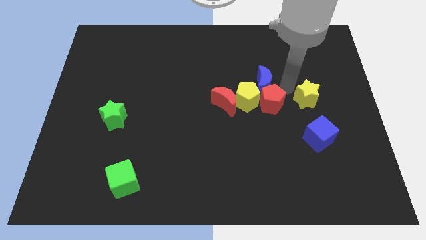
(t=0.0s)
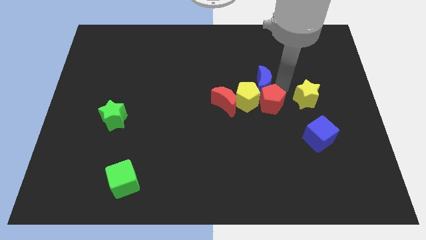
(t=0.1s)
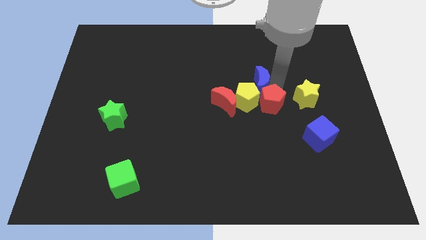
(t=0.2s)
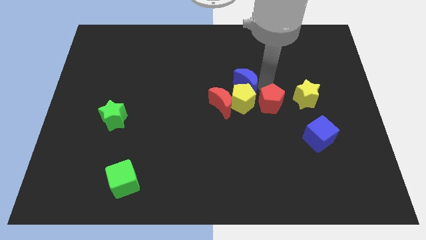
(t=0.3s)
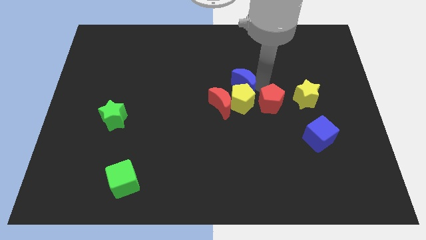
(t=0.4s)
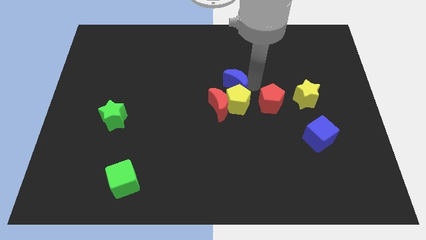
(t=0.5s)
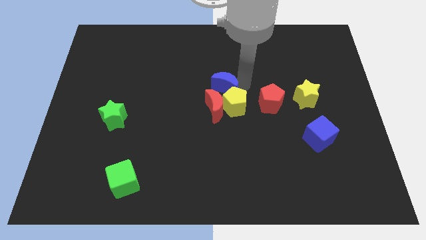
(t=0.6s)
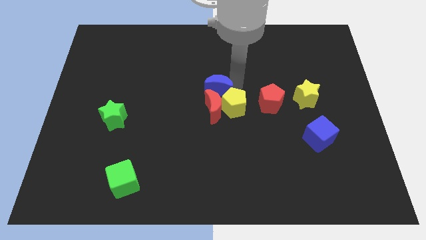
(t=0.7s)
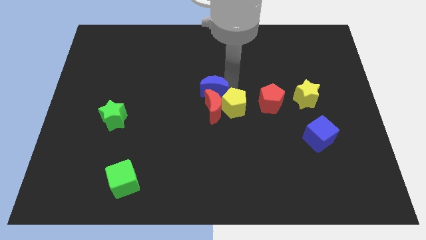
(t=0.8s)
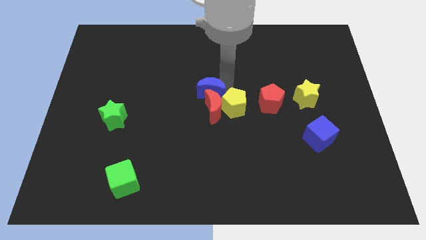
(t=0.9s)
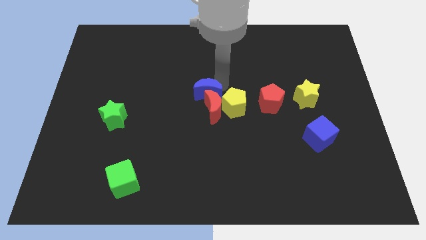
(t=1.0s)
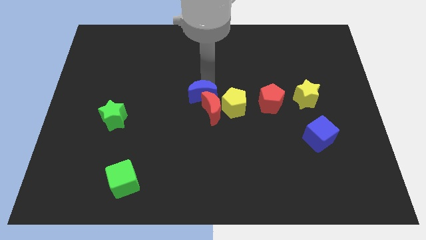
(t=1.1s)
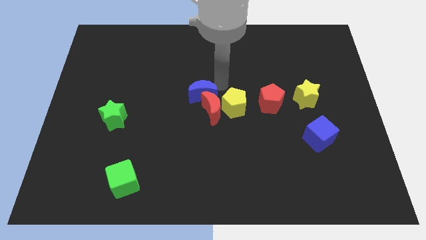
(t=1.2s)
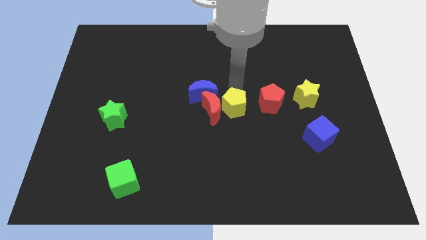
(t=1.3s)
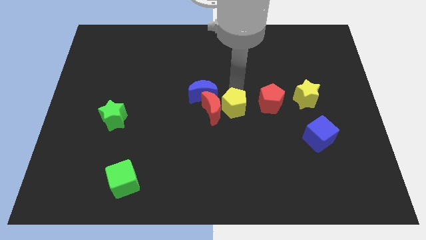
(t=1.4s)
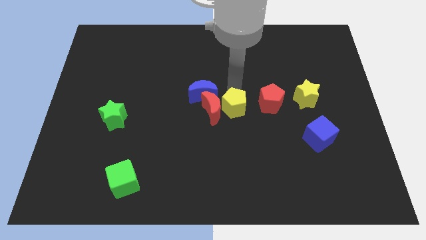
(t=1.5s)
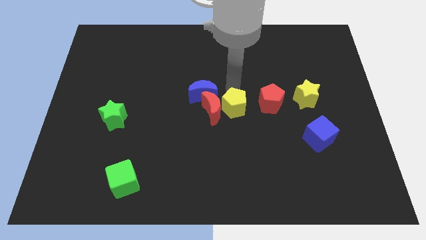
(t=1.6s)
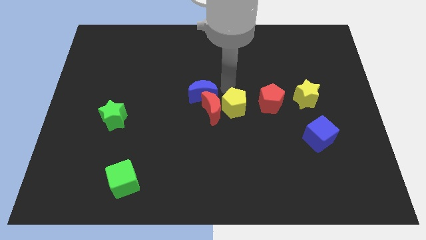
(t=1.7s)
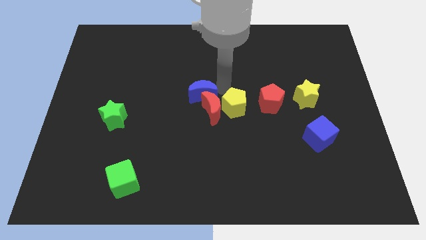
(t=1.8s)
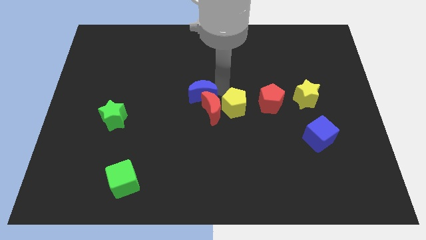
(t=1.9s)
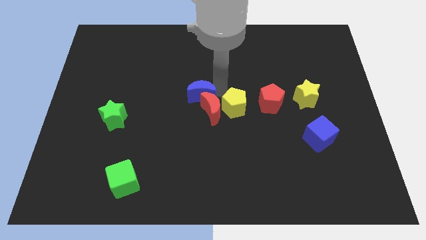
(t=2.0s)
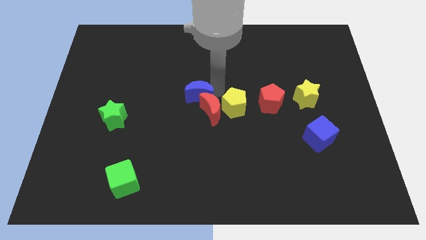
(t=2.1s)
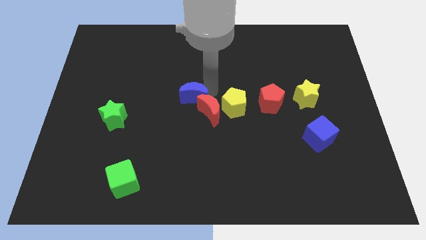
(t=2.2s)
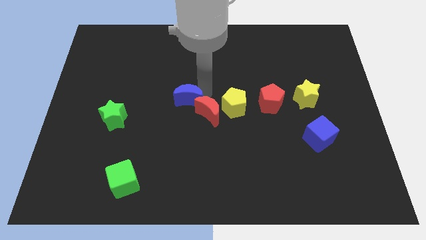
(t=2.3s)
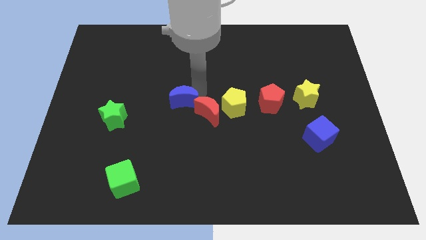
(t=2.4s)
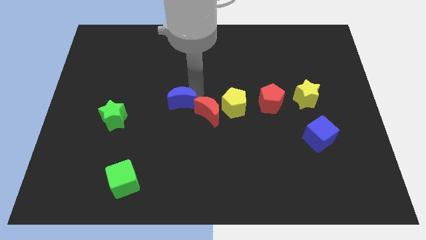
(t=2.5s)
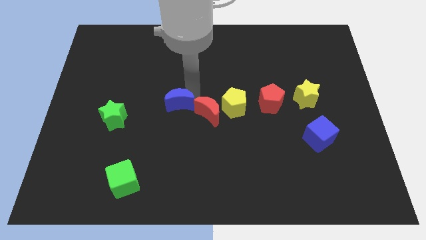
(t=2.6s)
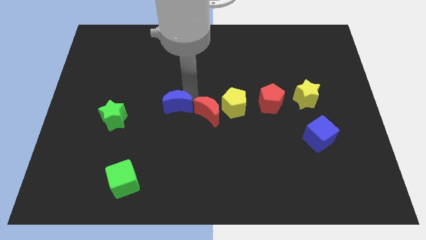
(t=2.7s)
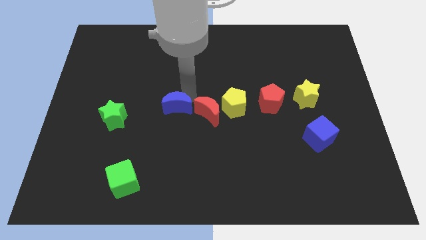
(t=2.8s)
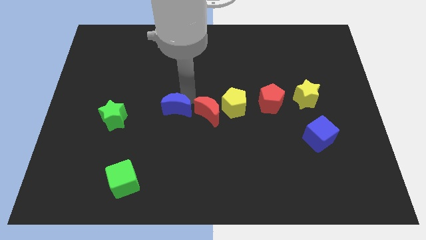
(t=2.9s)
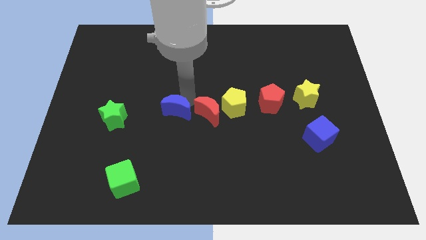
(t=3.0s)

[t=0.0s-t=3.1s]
place the blue moon to the left of red moon

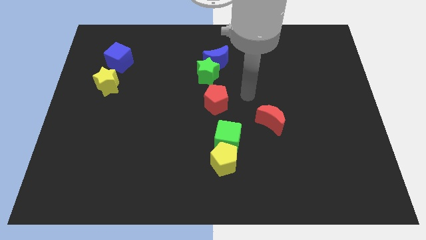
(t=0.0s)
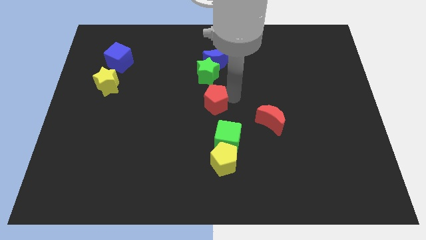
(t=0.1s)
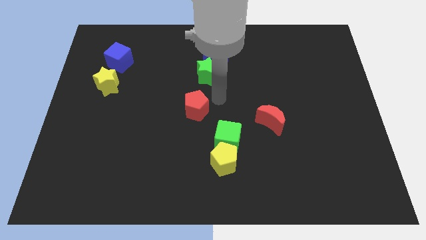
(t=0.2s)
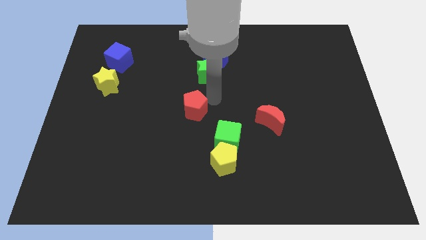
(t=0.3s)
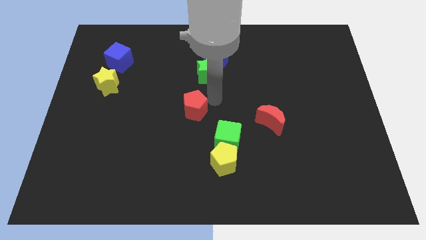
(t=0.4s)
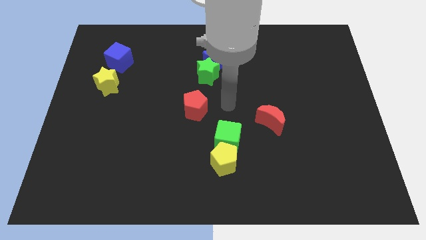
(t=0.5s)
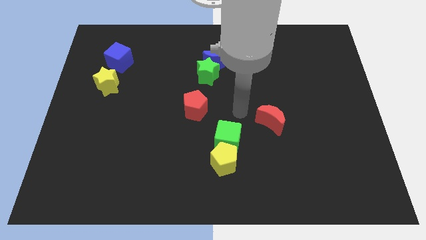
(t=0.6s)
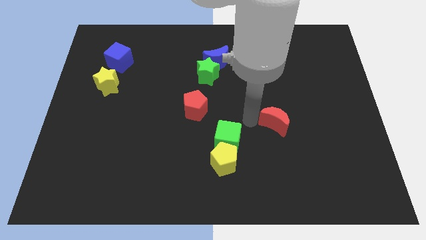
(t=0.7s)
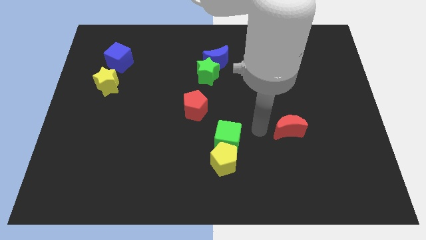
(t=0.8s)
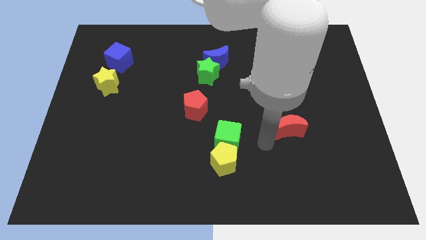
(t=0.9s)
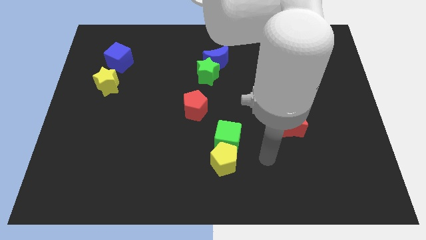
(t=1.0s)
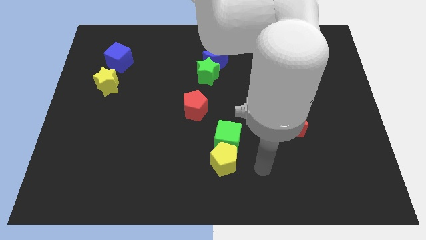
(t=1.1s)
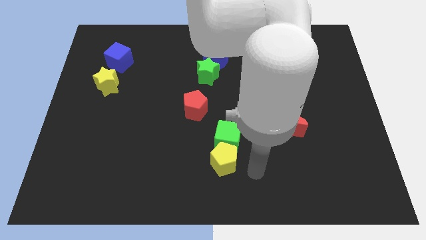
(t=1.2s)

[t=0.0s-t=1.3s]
slightly push the red pentagon to left

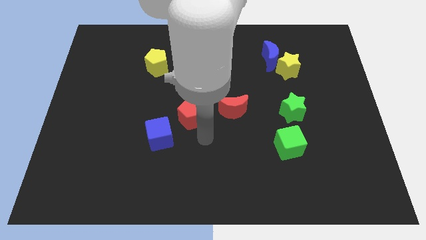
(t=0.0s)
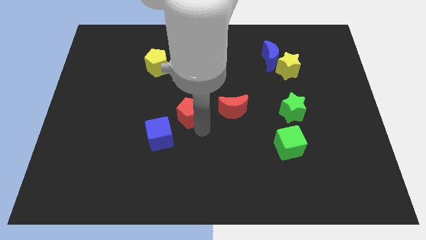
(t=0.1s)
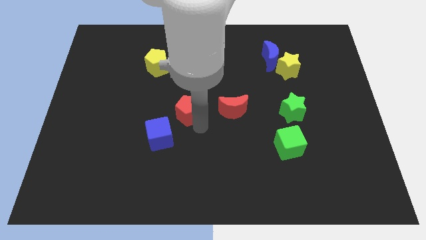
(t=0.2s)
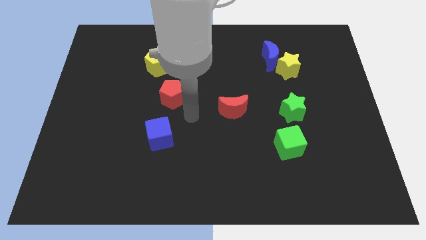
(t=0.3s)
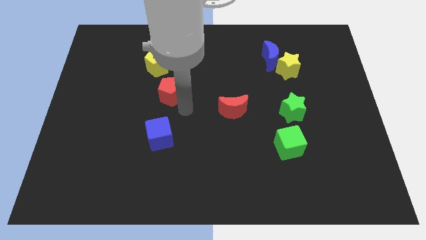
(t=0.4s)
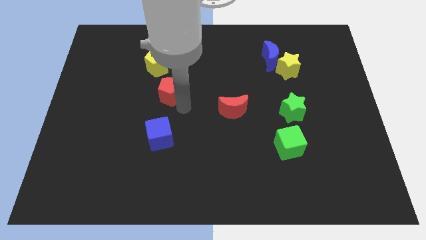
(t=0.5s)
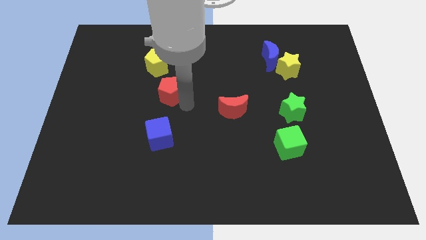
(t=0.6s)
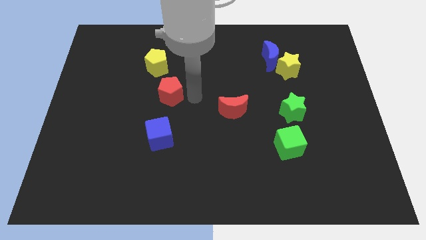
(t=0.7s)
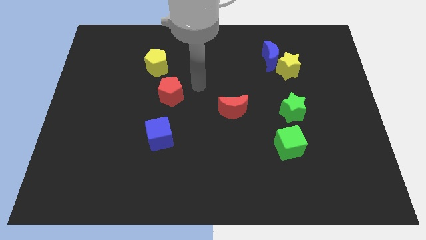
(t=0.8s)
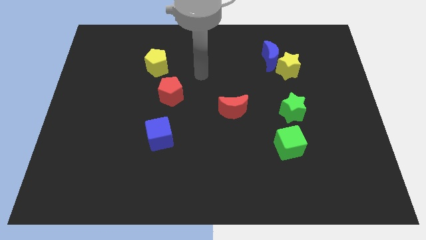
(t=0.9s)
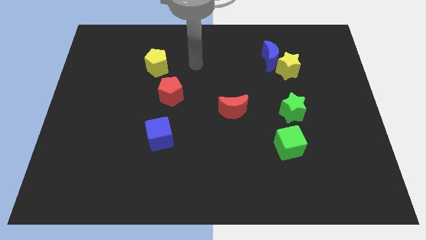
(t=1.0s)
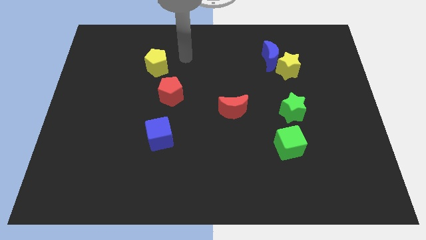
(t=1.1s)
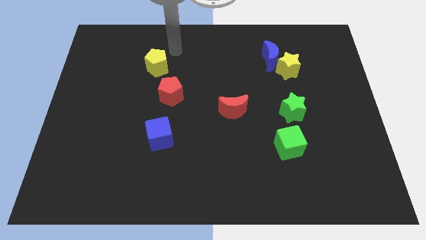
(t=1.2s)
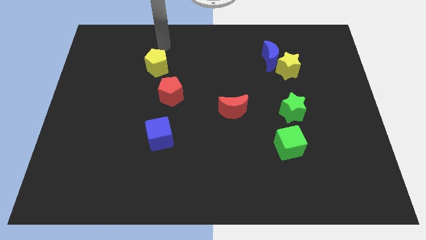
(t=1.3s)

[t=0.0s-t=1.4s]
push the red pentagon towards the yellow pentagon

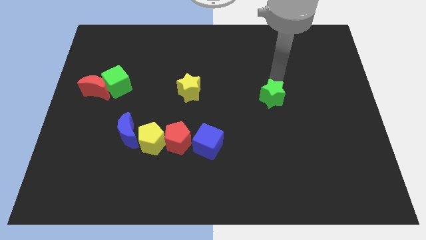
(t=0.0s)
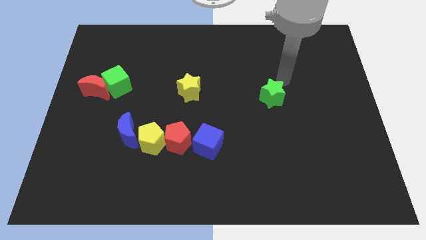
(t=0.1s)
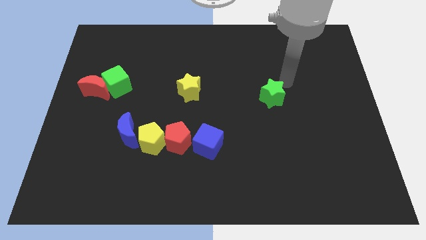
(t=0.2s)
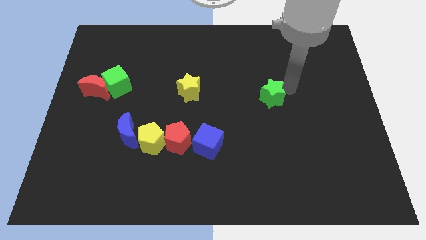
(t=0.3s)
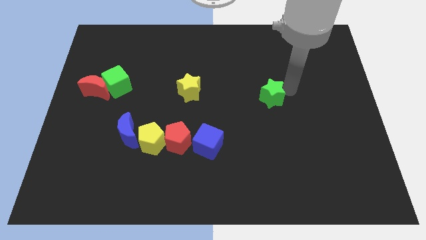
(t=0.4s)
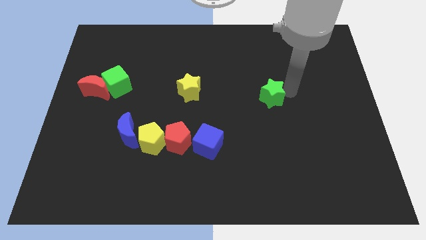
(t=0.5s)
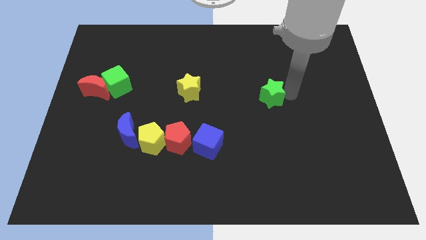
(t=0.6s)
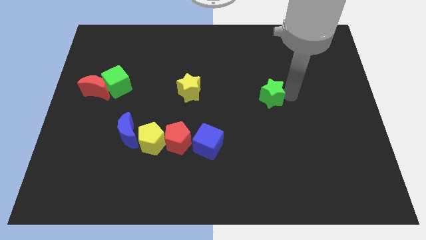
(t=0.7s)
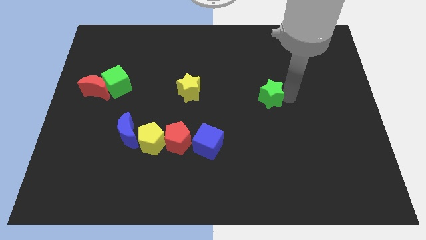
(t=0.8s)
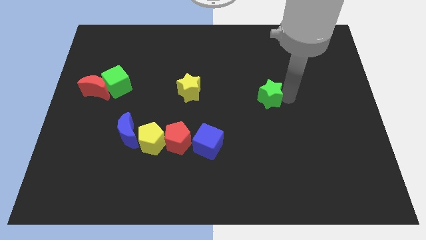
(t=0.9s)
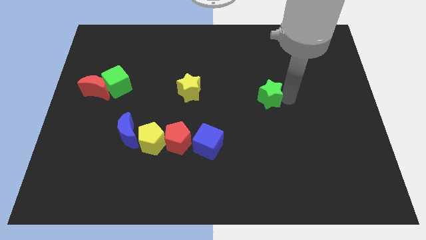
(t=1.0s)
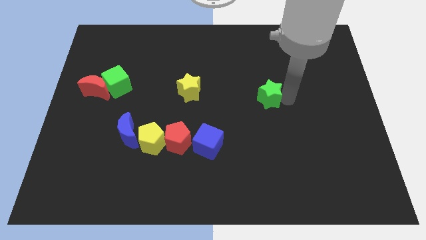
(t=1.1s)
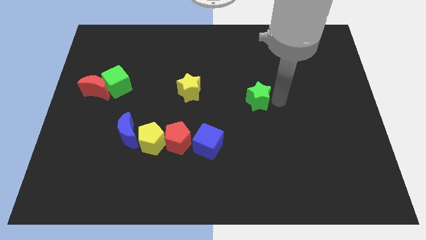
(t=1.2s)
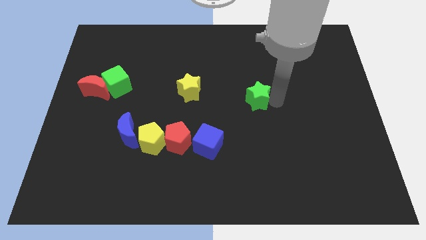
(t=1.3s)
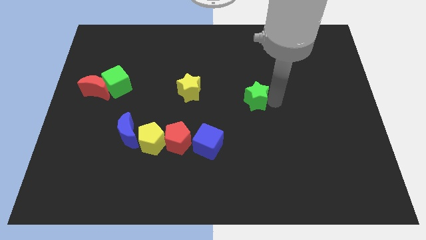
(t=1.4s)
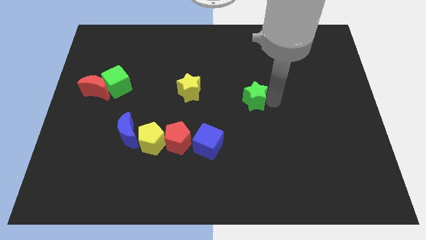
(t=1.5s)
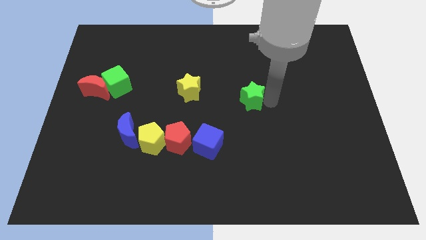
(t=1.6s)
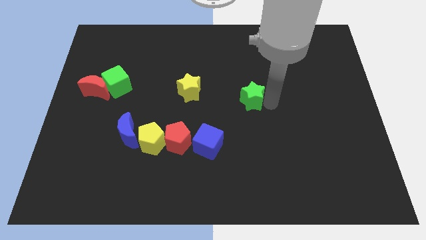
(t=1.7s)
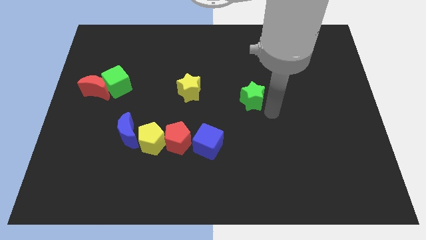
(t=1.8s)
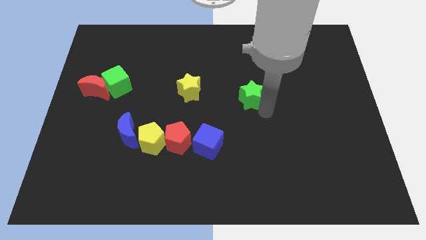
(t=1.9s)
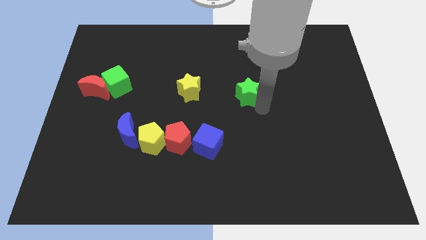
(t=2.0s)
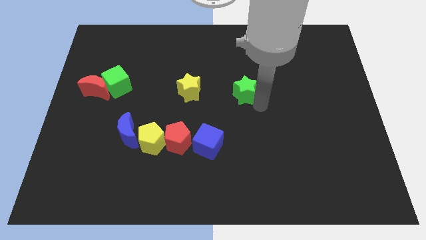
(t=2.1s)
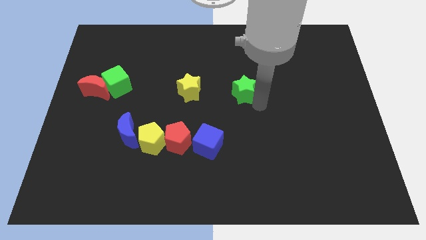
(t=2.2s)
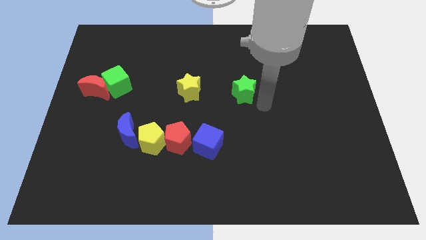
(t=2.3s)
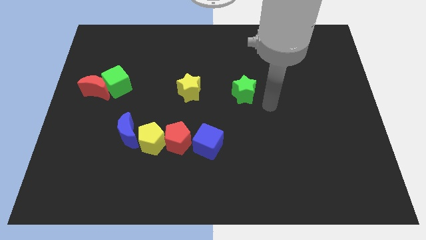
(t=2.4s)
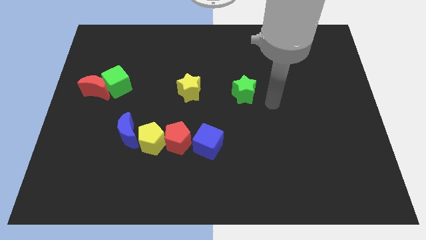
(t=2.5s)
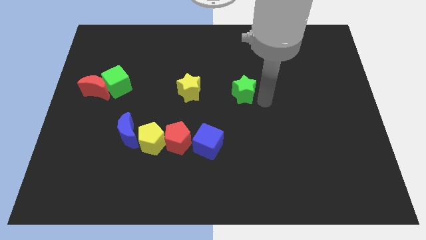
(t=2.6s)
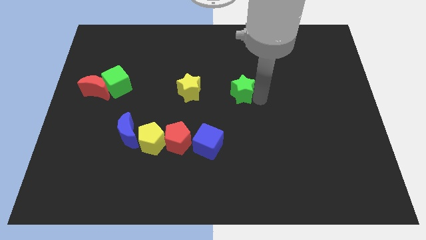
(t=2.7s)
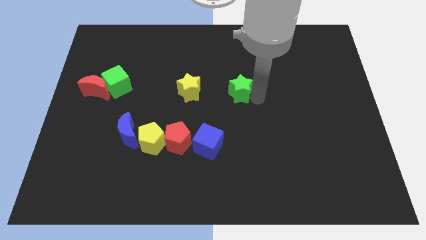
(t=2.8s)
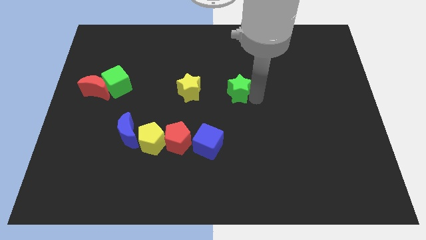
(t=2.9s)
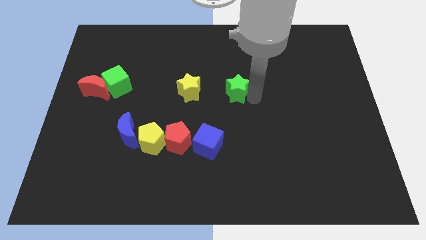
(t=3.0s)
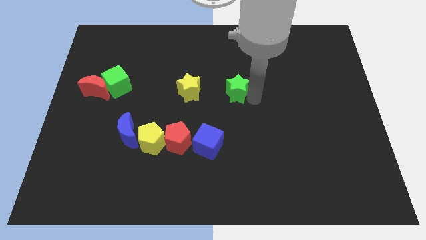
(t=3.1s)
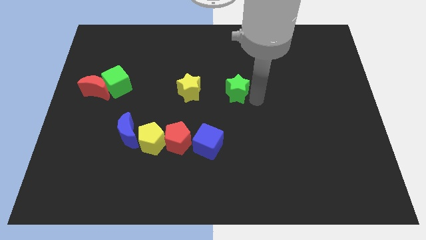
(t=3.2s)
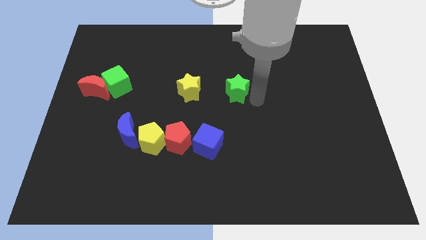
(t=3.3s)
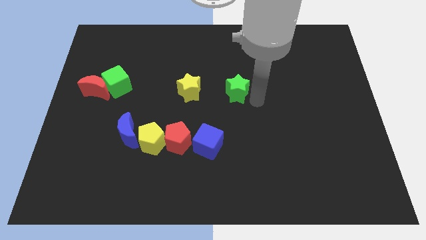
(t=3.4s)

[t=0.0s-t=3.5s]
move the green star parallel right to the yellow star
